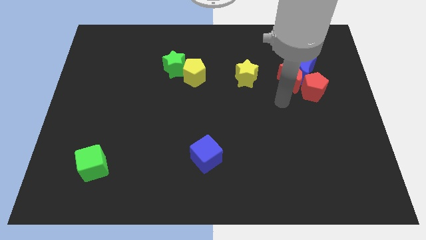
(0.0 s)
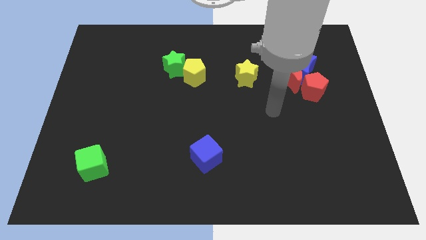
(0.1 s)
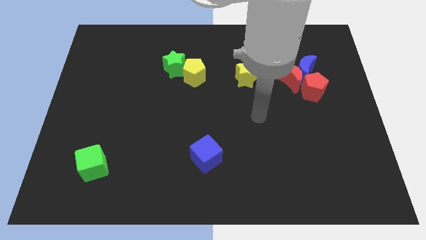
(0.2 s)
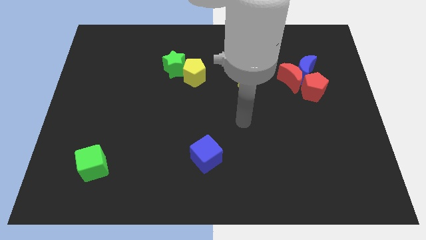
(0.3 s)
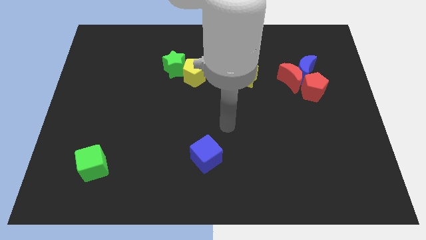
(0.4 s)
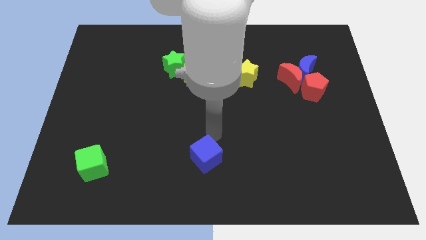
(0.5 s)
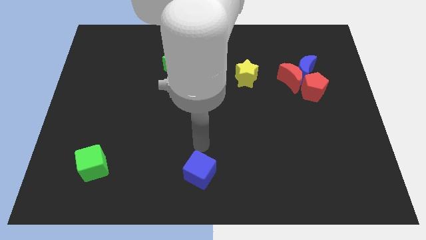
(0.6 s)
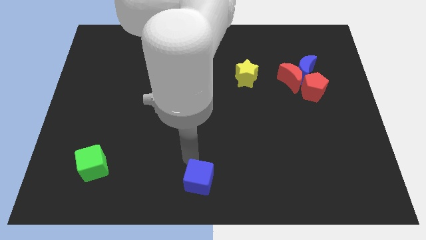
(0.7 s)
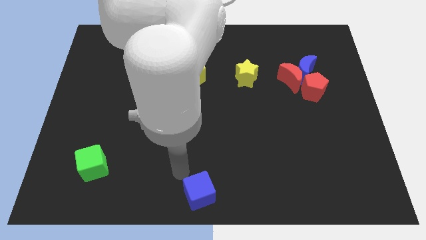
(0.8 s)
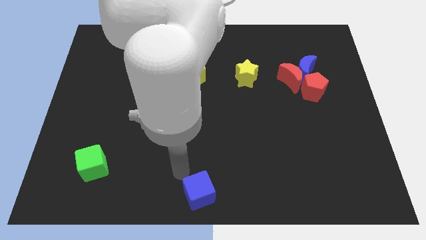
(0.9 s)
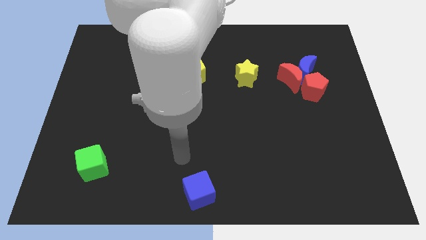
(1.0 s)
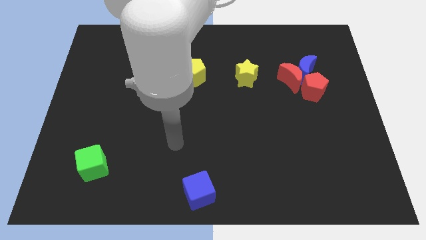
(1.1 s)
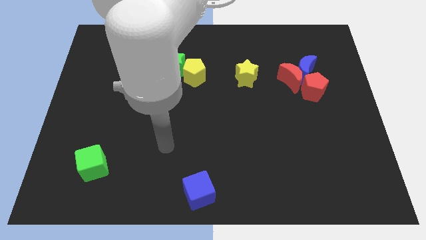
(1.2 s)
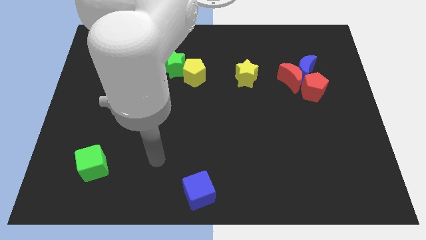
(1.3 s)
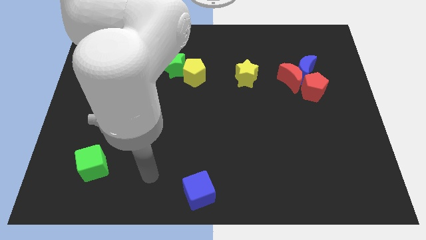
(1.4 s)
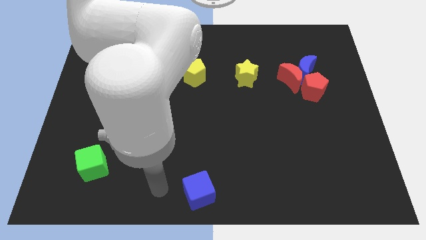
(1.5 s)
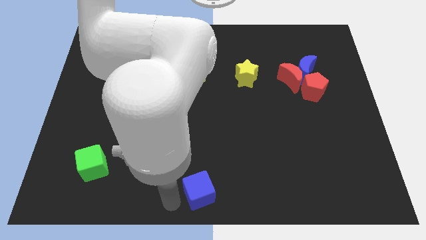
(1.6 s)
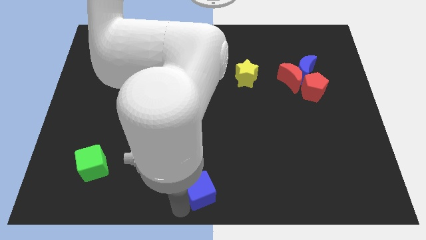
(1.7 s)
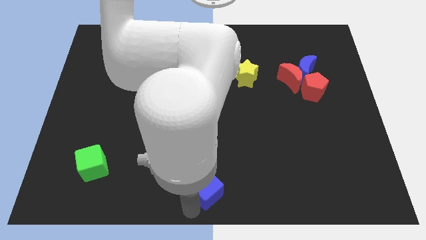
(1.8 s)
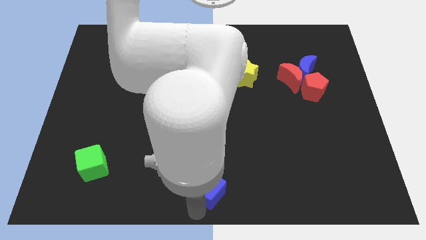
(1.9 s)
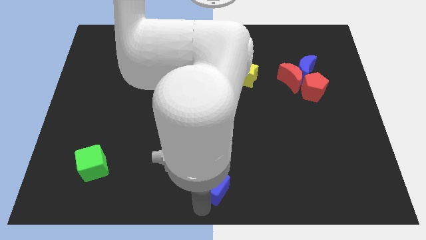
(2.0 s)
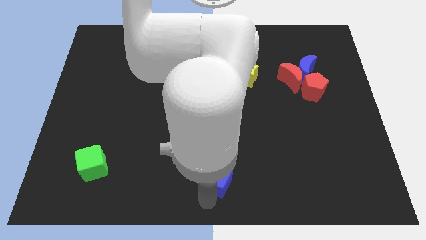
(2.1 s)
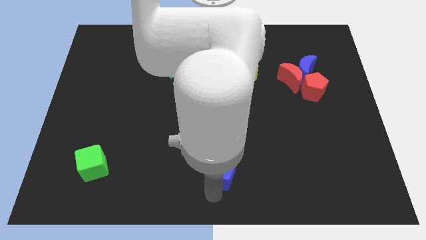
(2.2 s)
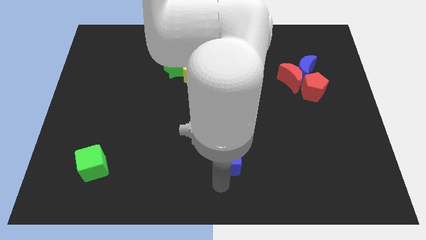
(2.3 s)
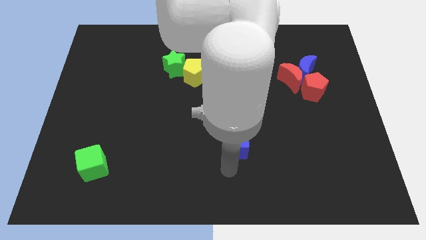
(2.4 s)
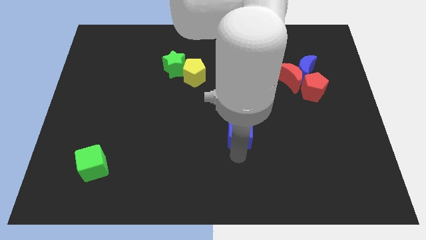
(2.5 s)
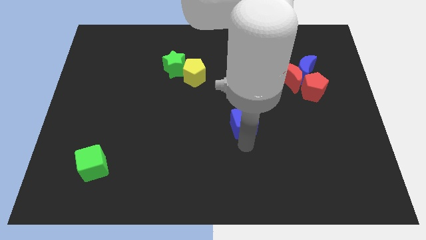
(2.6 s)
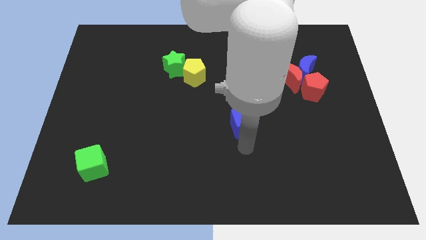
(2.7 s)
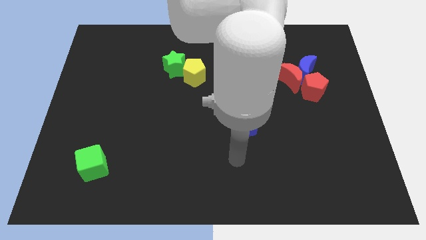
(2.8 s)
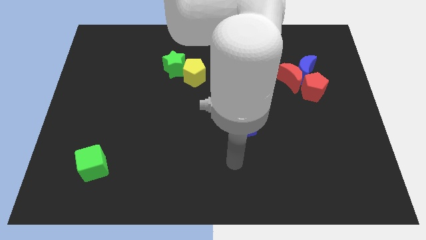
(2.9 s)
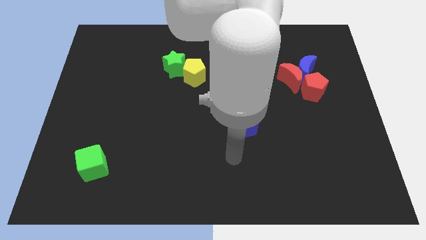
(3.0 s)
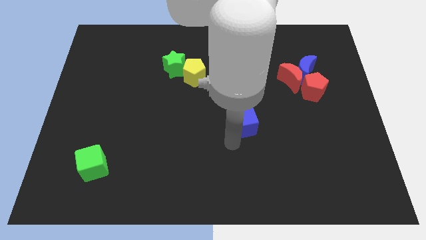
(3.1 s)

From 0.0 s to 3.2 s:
move the blue cube to the middle

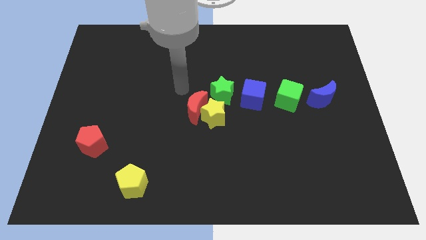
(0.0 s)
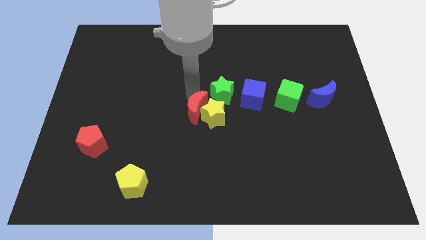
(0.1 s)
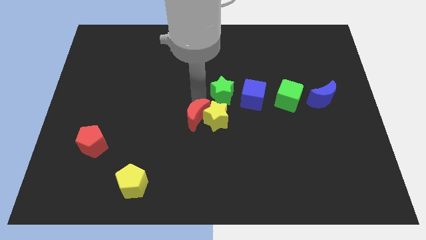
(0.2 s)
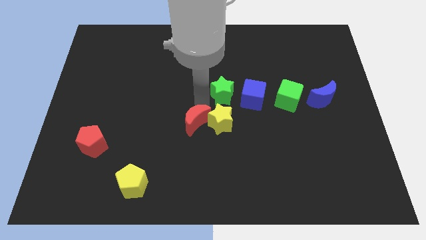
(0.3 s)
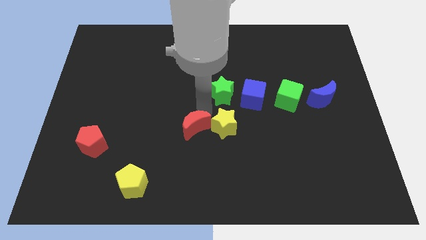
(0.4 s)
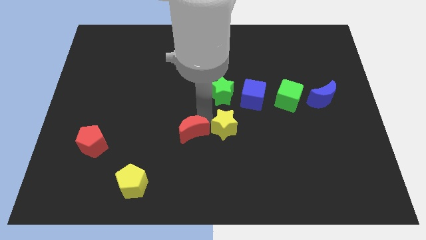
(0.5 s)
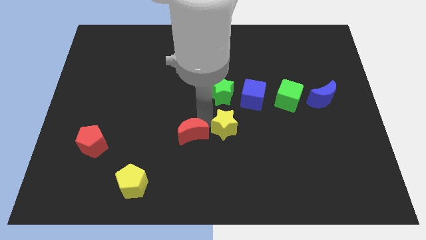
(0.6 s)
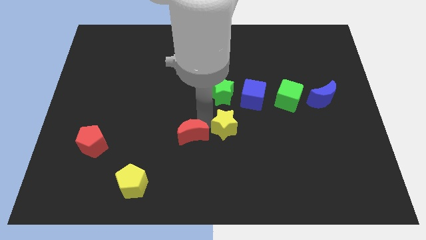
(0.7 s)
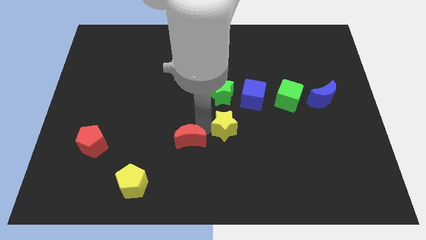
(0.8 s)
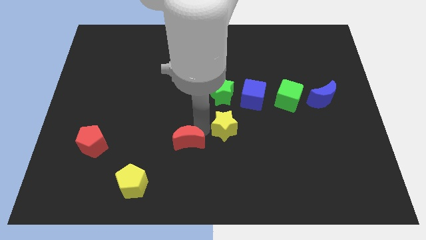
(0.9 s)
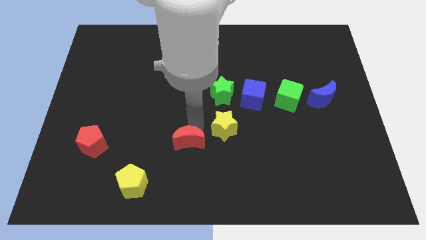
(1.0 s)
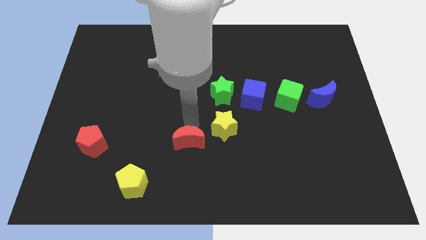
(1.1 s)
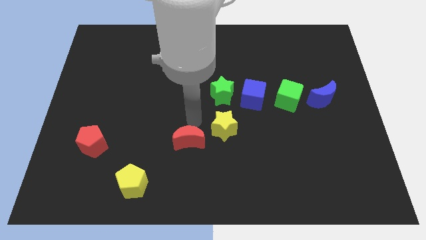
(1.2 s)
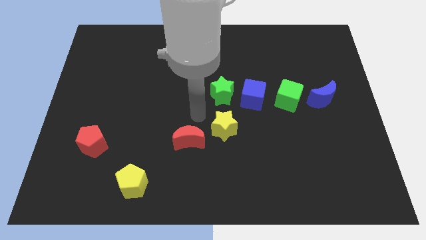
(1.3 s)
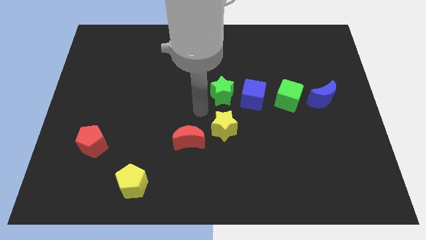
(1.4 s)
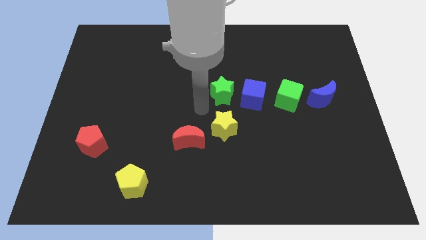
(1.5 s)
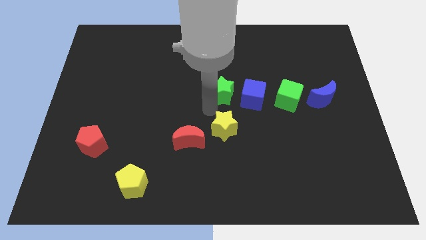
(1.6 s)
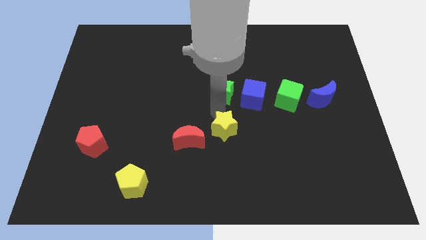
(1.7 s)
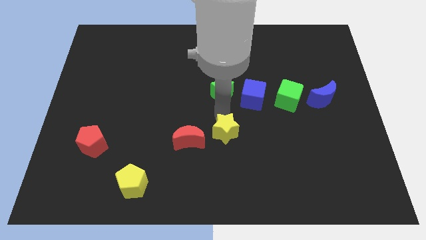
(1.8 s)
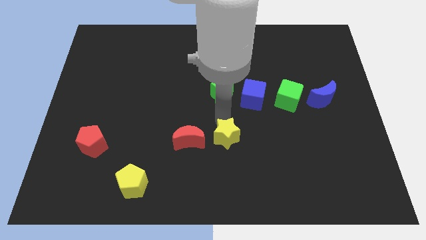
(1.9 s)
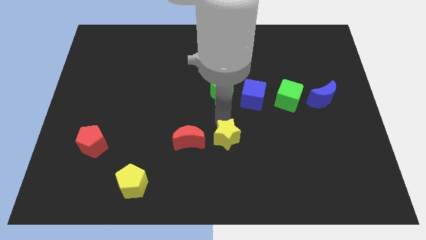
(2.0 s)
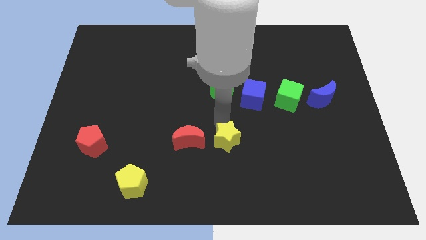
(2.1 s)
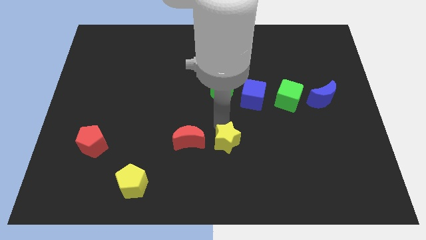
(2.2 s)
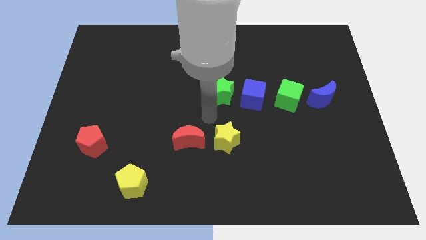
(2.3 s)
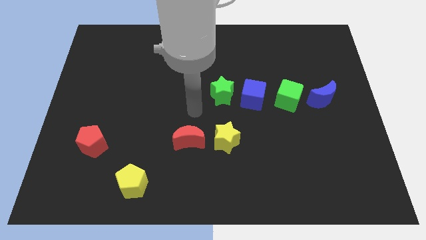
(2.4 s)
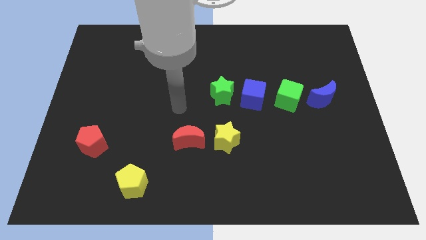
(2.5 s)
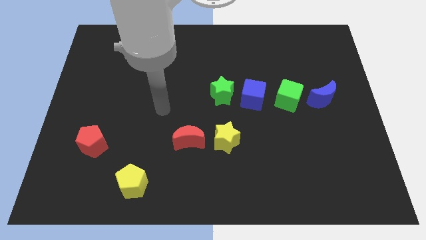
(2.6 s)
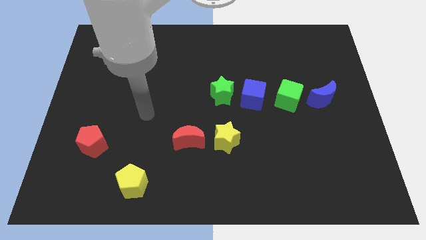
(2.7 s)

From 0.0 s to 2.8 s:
place a yellow star below the red crescent

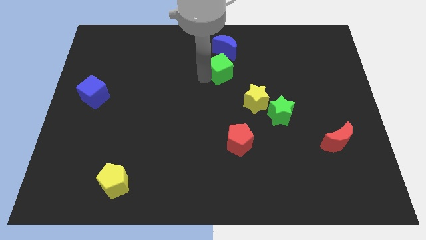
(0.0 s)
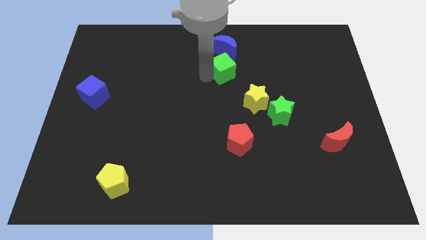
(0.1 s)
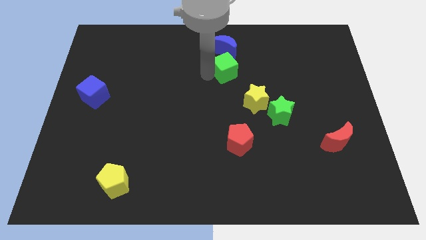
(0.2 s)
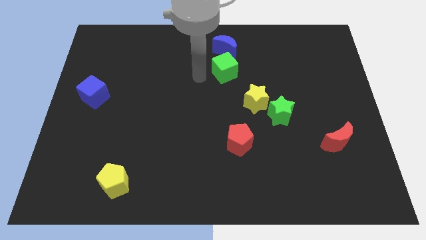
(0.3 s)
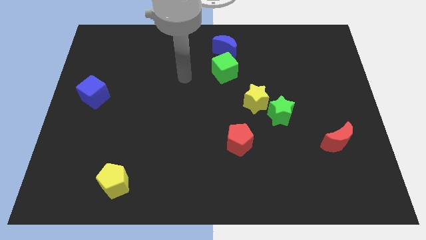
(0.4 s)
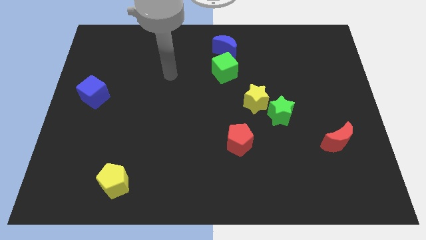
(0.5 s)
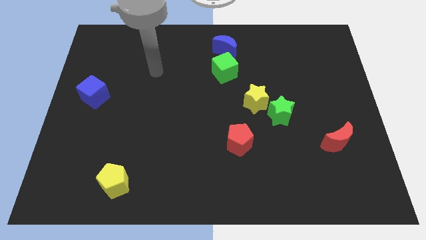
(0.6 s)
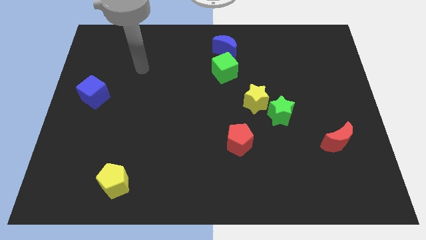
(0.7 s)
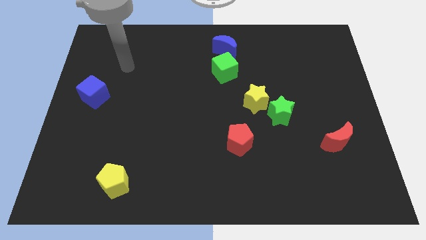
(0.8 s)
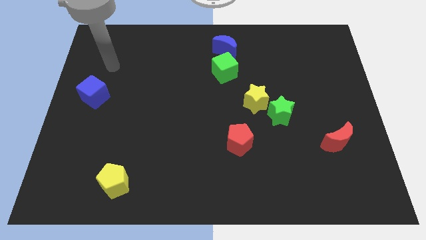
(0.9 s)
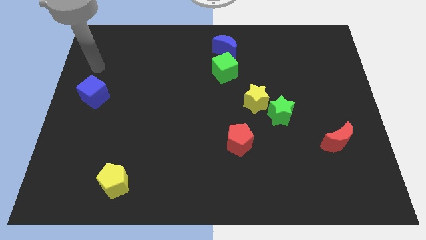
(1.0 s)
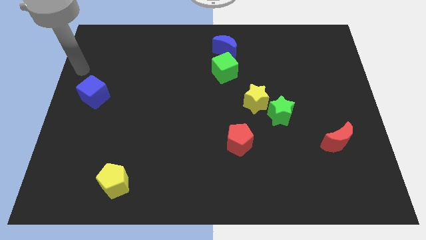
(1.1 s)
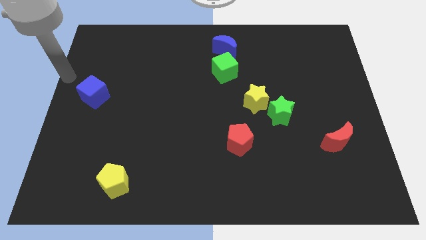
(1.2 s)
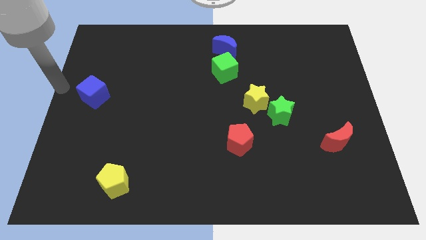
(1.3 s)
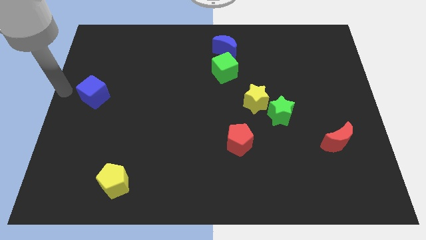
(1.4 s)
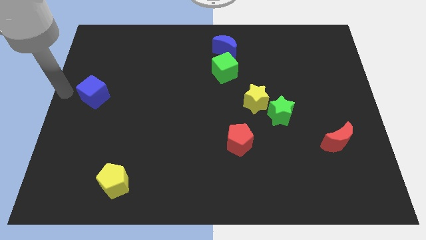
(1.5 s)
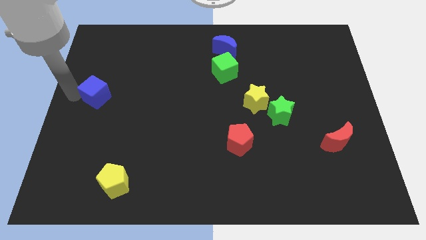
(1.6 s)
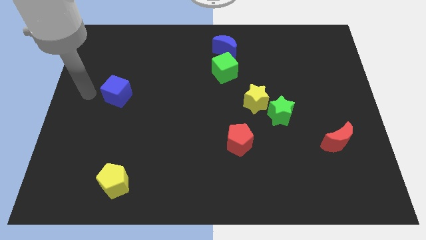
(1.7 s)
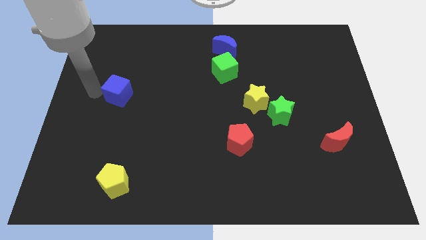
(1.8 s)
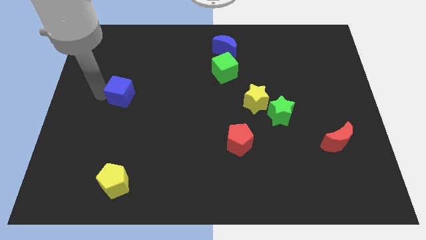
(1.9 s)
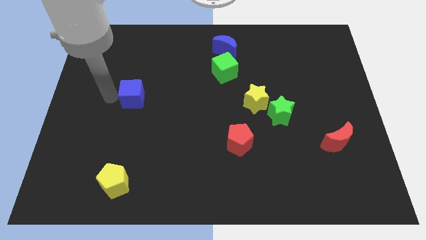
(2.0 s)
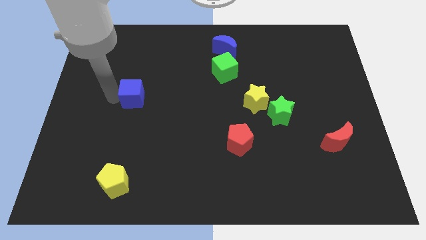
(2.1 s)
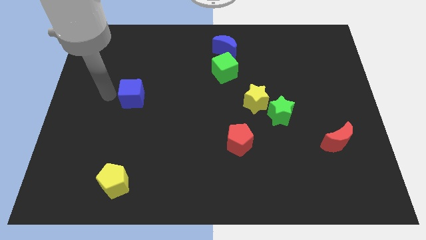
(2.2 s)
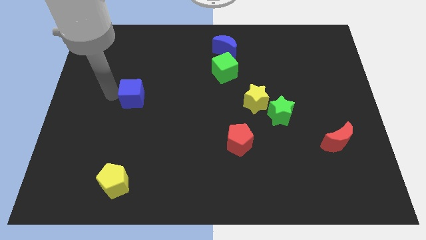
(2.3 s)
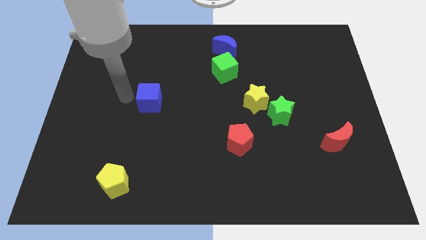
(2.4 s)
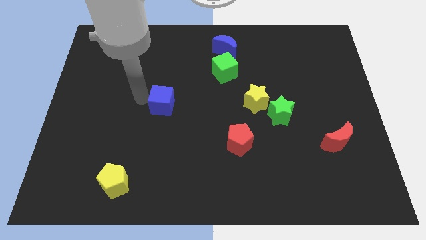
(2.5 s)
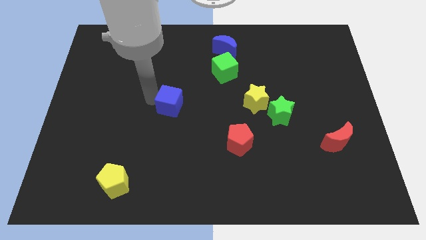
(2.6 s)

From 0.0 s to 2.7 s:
move arm near blue cube

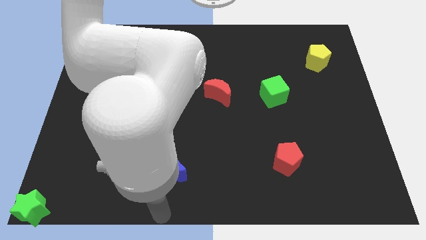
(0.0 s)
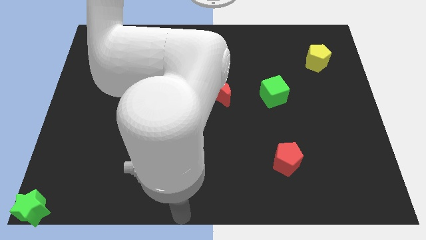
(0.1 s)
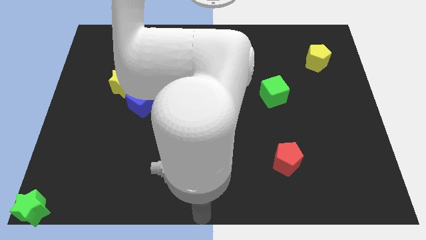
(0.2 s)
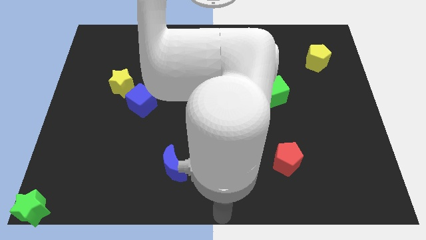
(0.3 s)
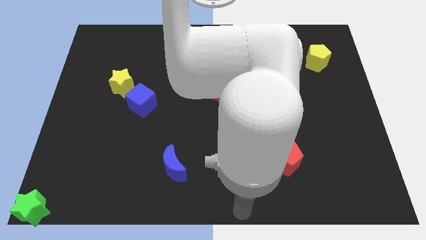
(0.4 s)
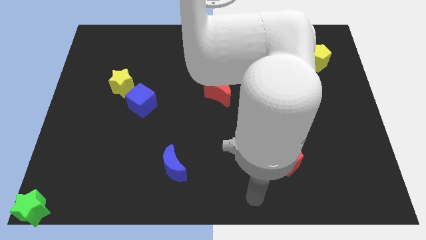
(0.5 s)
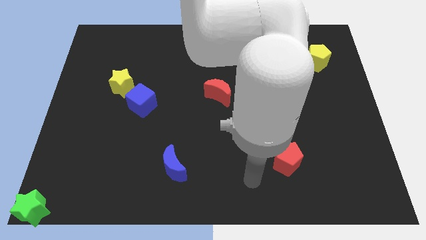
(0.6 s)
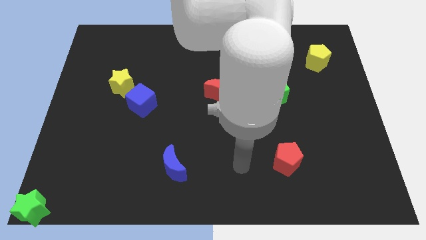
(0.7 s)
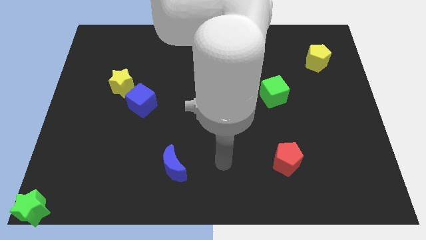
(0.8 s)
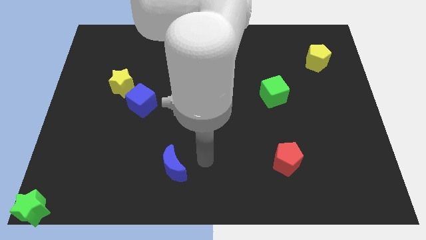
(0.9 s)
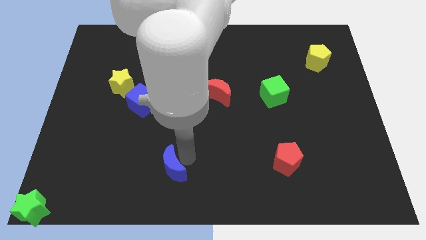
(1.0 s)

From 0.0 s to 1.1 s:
move the arm to the left of the blue moon
